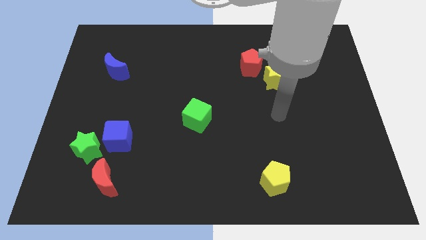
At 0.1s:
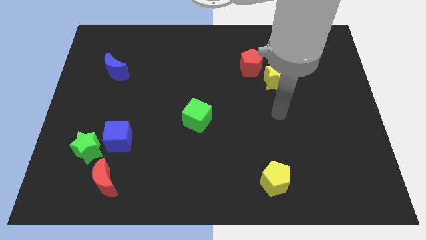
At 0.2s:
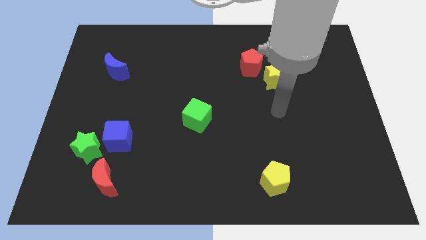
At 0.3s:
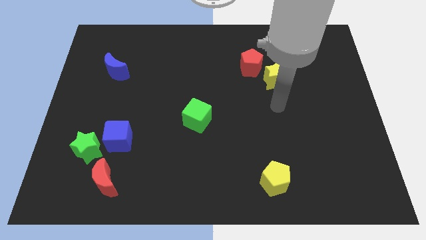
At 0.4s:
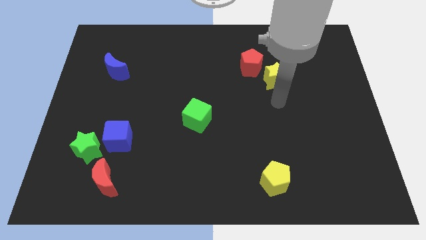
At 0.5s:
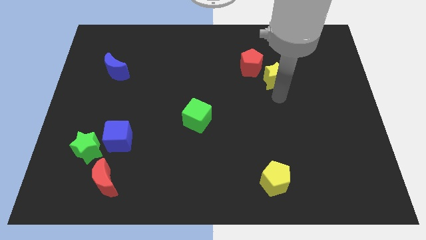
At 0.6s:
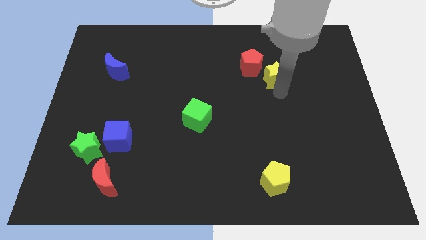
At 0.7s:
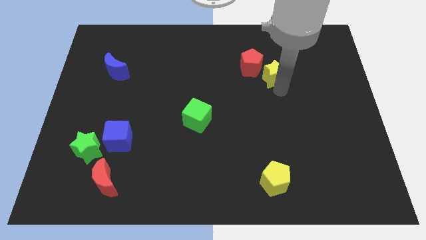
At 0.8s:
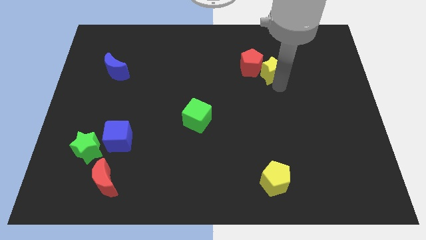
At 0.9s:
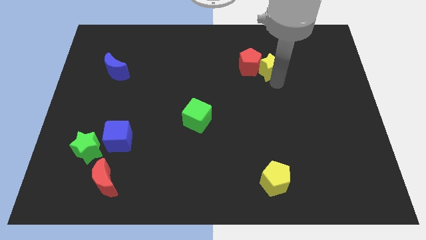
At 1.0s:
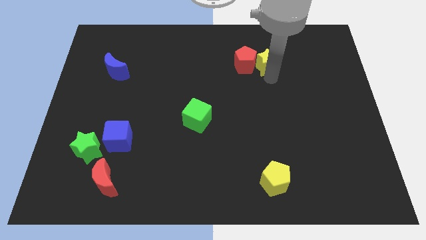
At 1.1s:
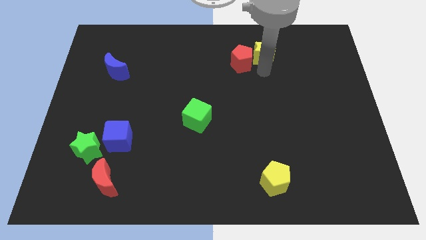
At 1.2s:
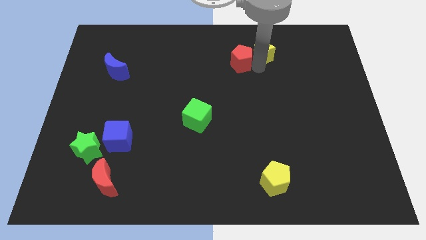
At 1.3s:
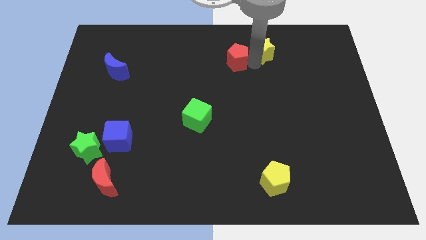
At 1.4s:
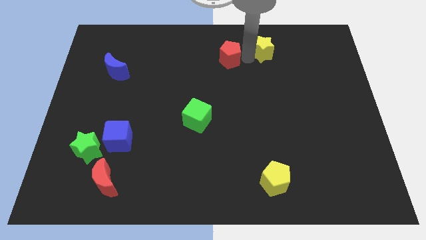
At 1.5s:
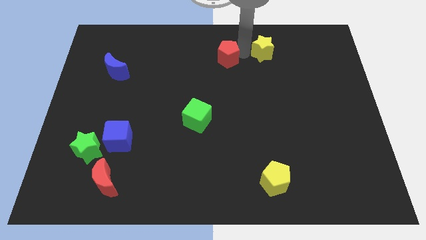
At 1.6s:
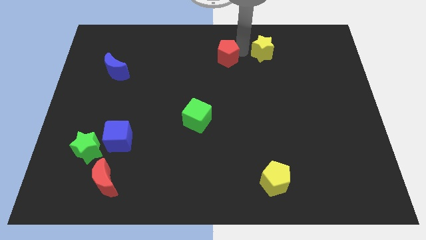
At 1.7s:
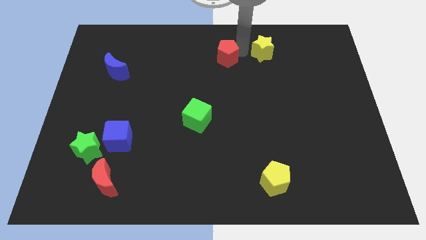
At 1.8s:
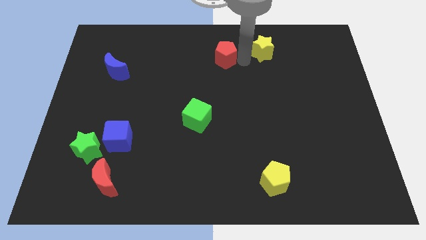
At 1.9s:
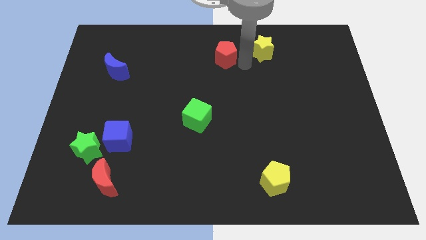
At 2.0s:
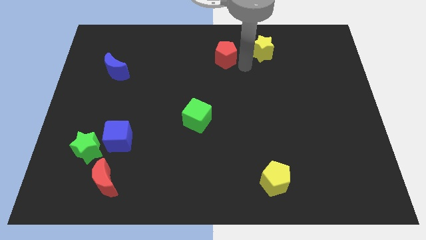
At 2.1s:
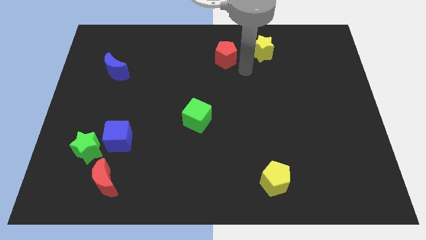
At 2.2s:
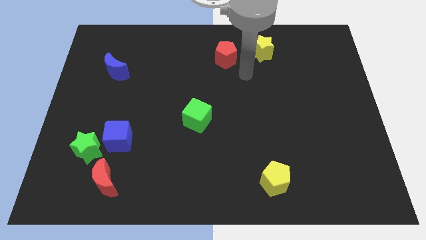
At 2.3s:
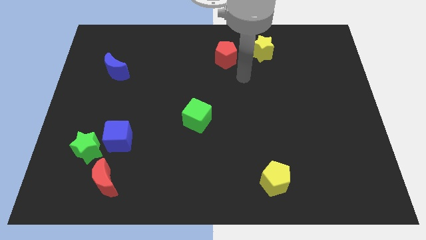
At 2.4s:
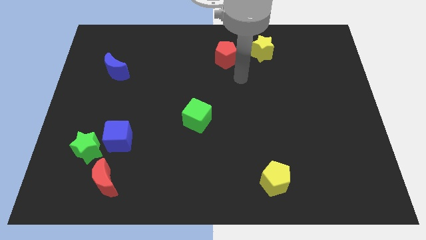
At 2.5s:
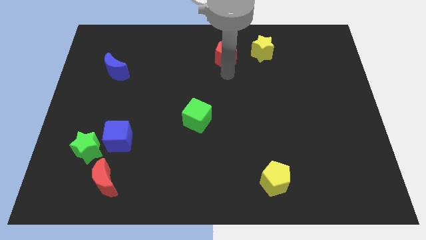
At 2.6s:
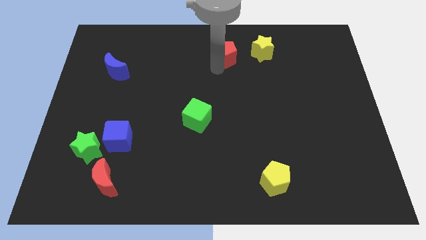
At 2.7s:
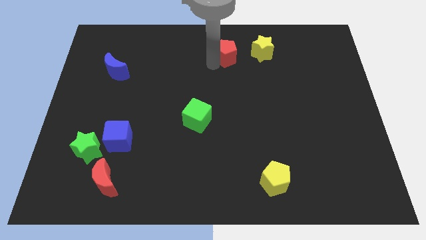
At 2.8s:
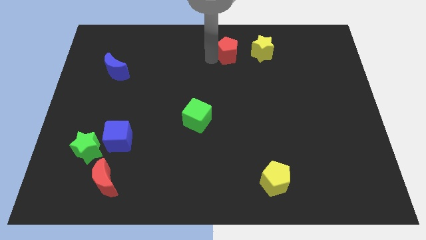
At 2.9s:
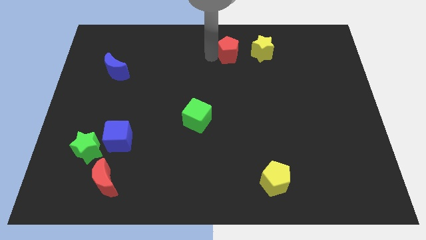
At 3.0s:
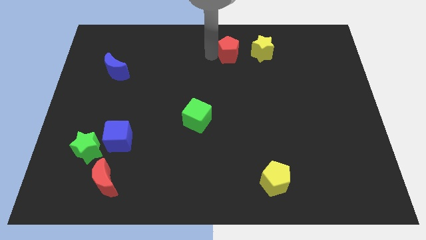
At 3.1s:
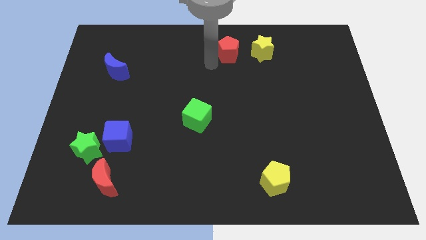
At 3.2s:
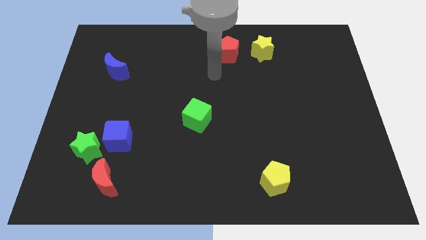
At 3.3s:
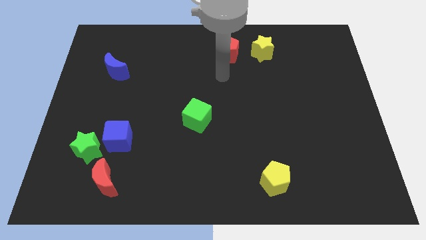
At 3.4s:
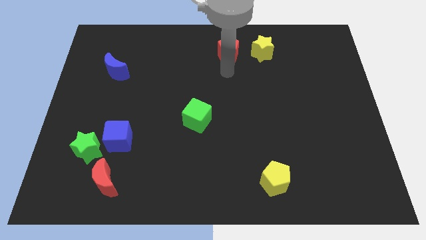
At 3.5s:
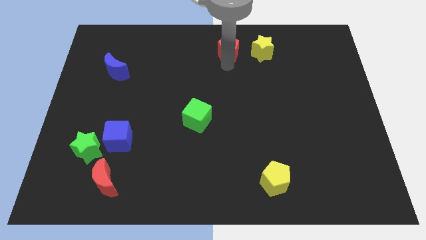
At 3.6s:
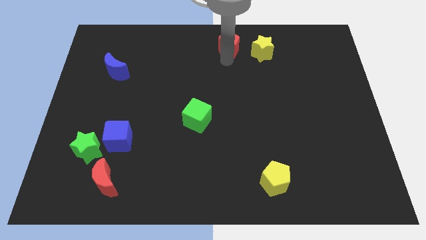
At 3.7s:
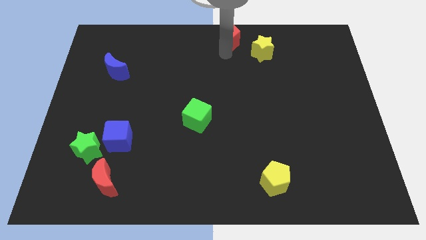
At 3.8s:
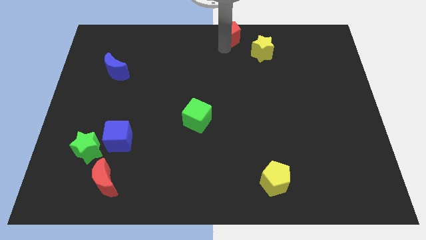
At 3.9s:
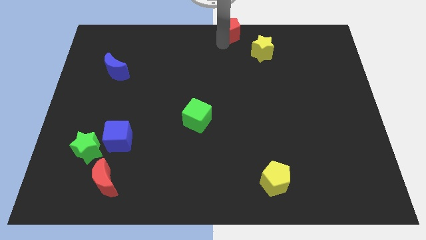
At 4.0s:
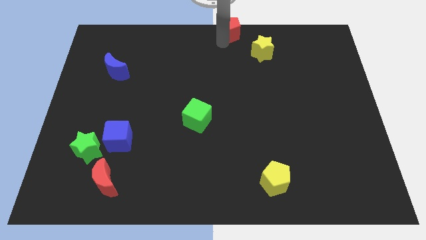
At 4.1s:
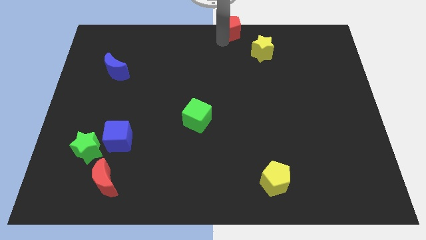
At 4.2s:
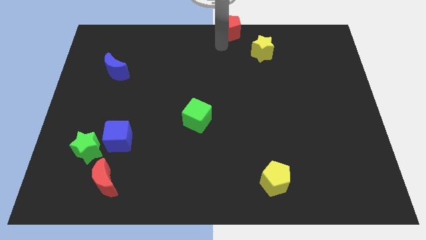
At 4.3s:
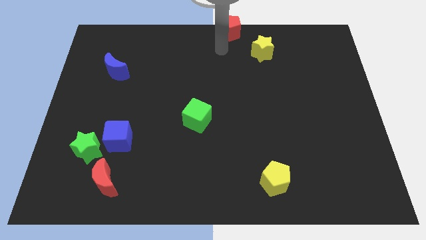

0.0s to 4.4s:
place the red pentagon diagonally top left to the yellow star

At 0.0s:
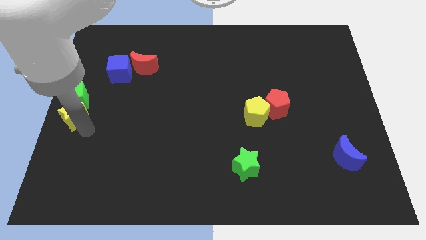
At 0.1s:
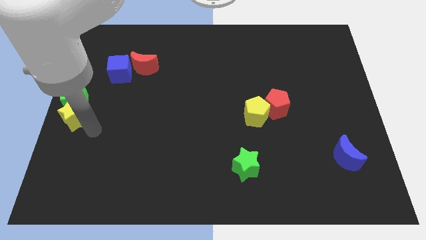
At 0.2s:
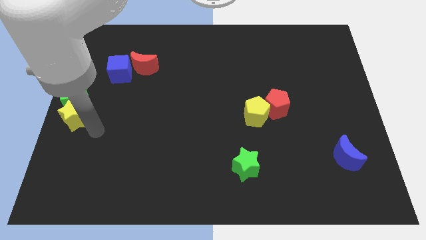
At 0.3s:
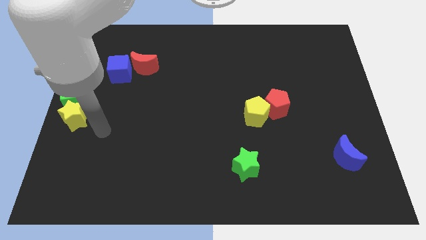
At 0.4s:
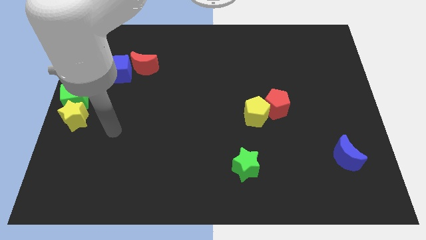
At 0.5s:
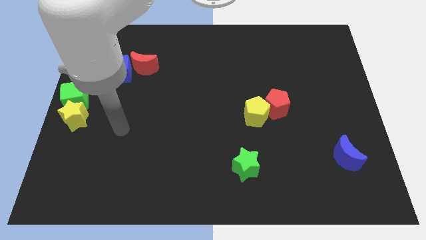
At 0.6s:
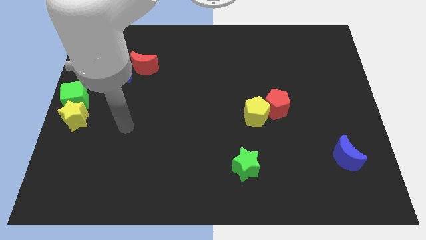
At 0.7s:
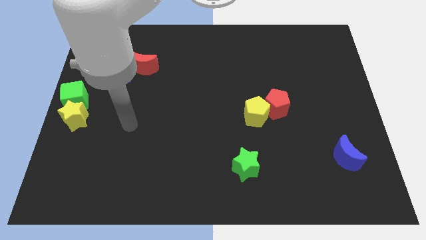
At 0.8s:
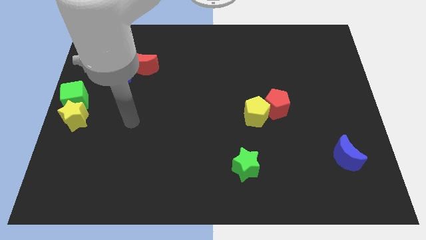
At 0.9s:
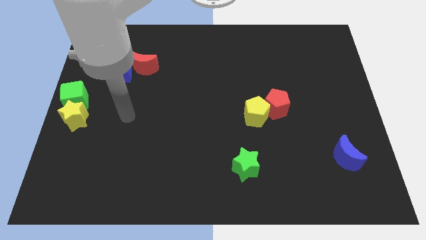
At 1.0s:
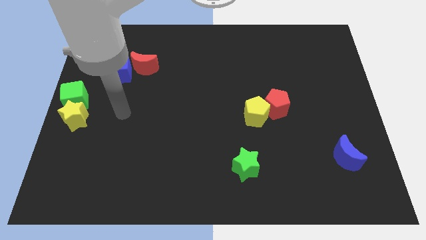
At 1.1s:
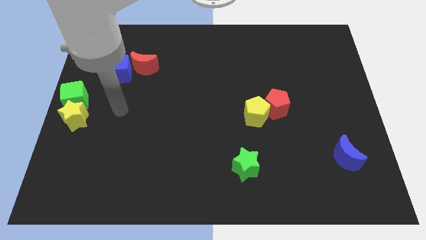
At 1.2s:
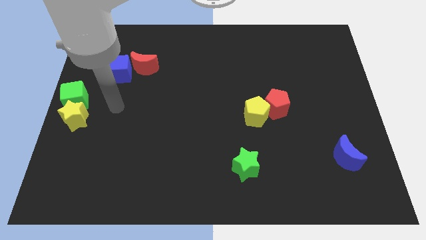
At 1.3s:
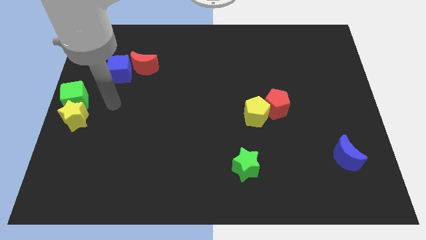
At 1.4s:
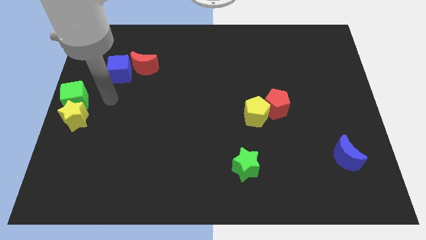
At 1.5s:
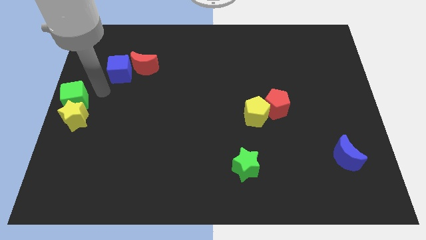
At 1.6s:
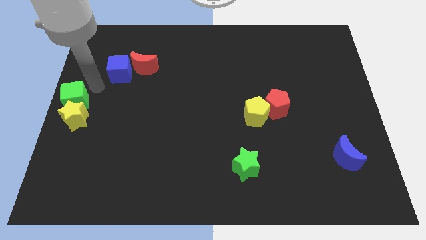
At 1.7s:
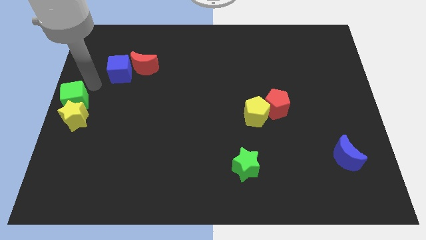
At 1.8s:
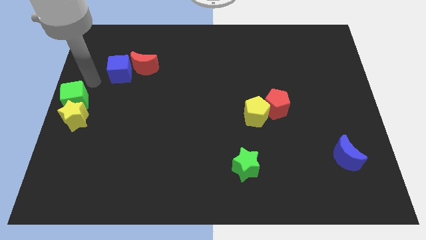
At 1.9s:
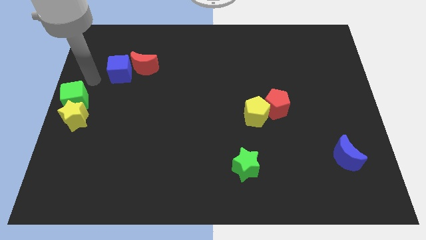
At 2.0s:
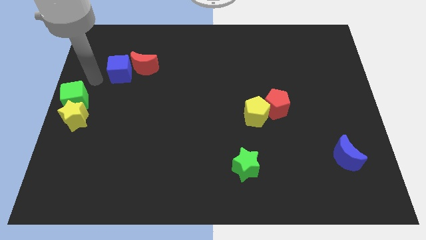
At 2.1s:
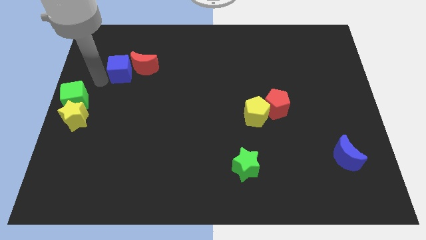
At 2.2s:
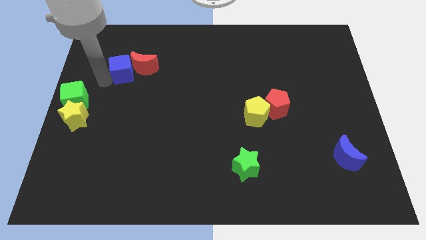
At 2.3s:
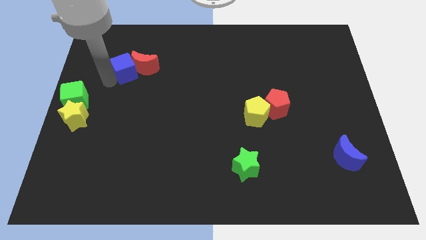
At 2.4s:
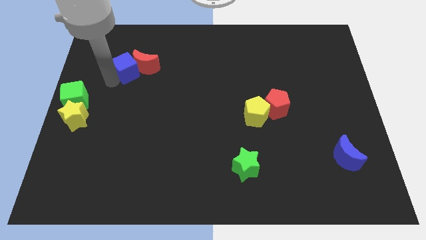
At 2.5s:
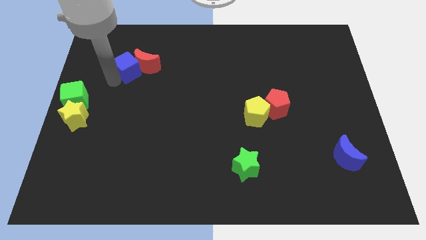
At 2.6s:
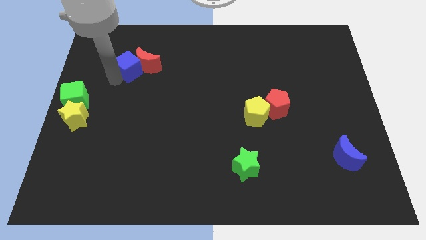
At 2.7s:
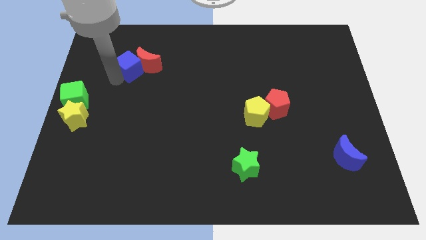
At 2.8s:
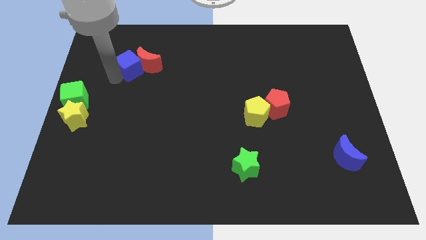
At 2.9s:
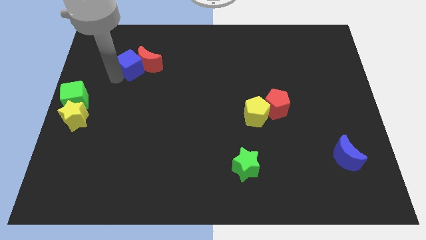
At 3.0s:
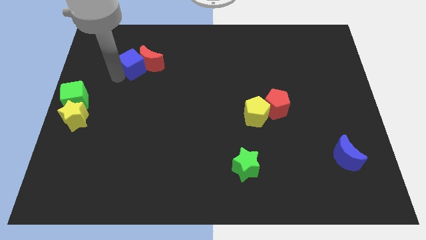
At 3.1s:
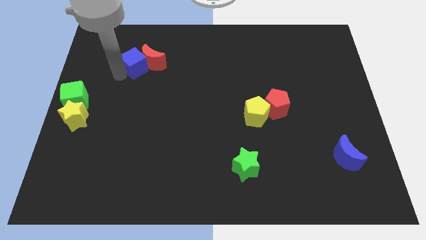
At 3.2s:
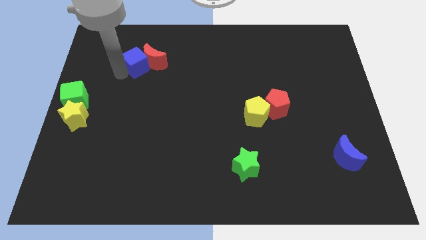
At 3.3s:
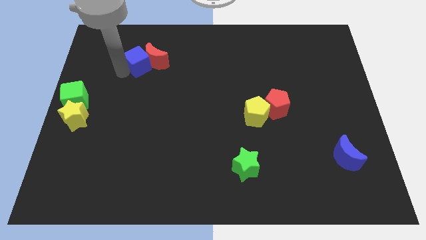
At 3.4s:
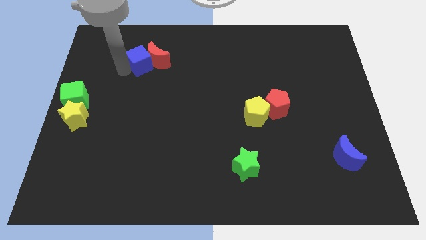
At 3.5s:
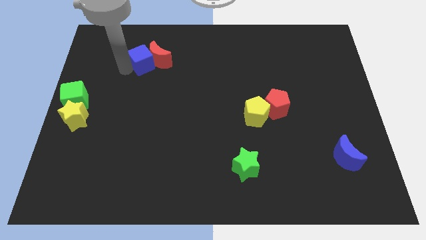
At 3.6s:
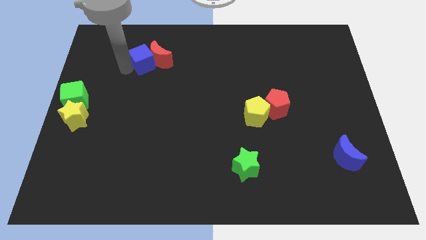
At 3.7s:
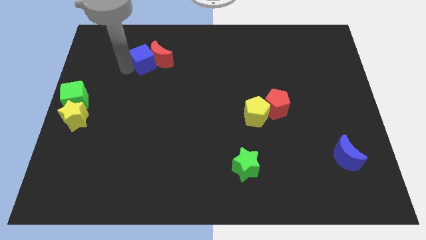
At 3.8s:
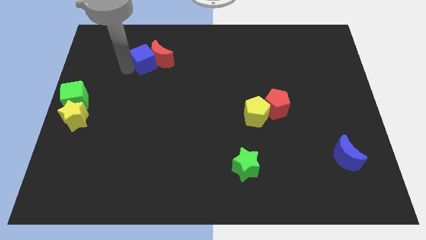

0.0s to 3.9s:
move the blue cube into the red moon

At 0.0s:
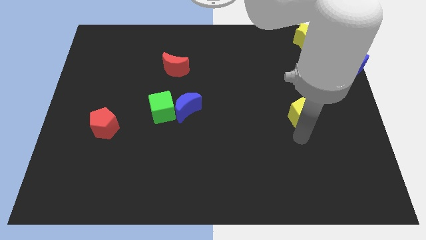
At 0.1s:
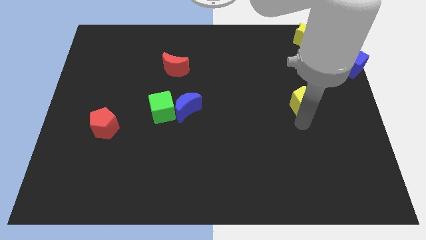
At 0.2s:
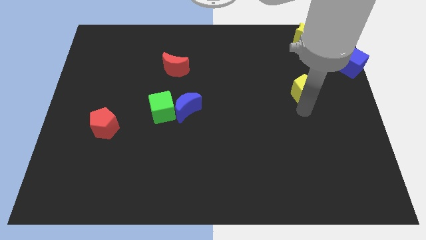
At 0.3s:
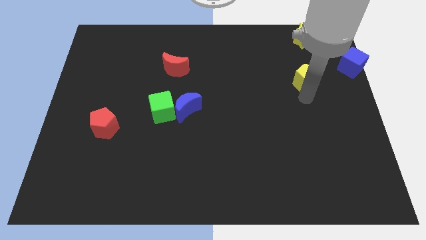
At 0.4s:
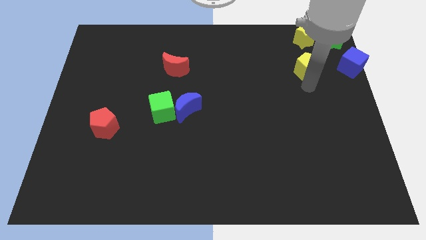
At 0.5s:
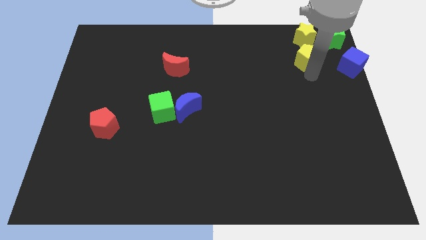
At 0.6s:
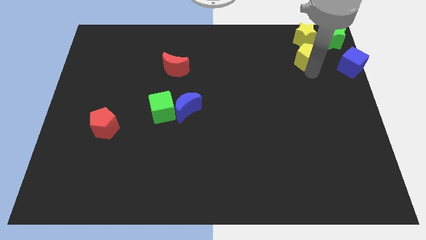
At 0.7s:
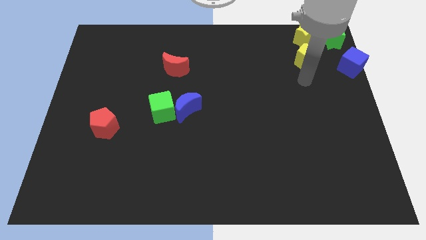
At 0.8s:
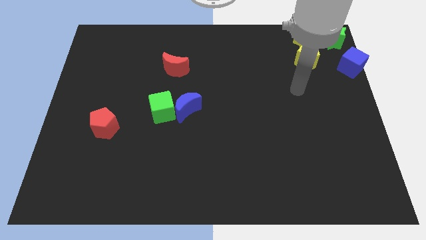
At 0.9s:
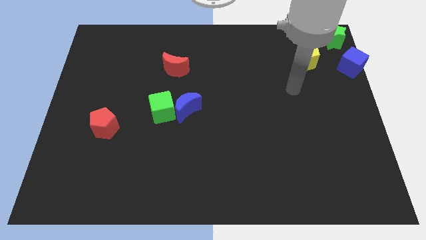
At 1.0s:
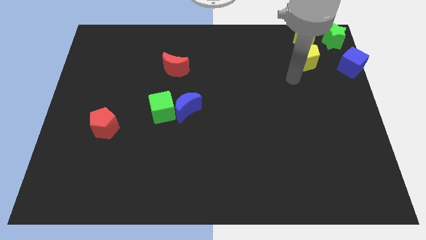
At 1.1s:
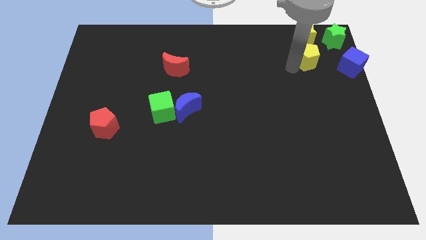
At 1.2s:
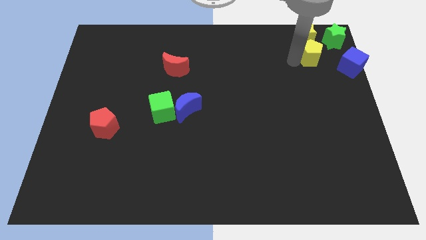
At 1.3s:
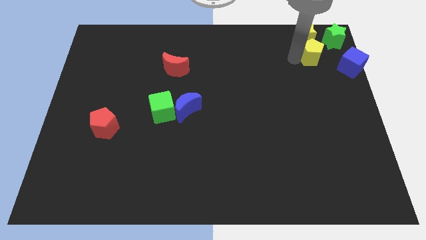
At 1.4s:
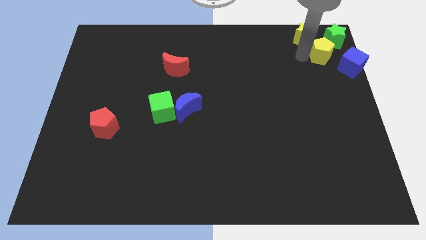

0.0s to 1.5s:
push yellow pentagon into yellow star
